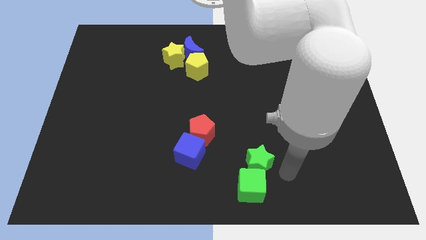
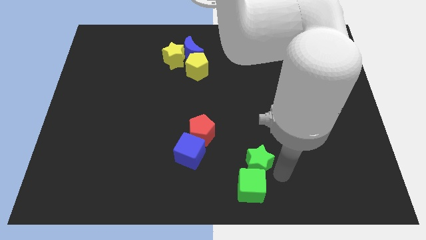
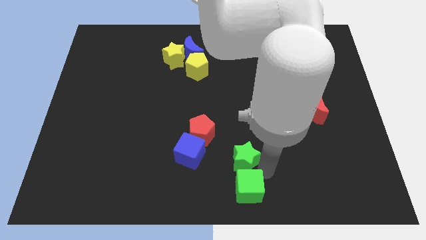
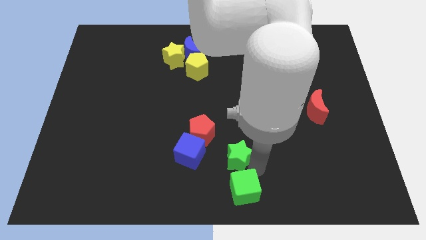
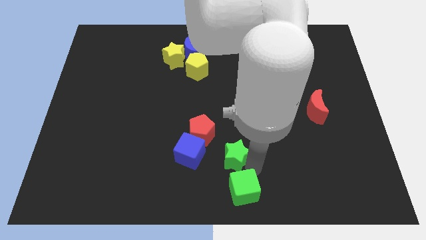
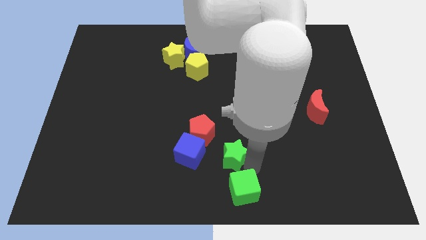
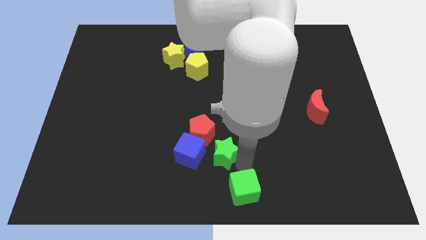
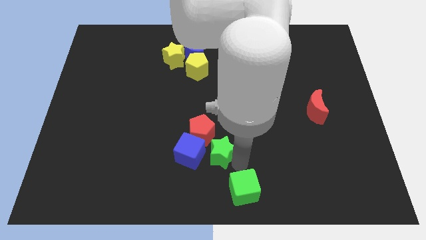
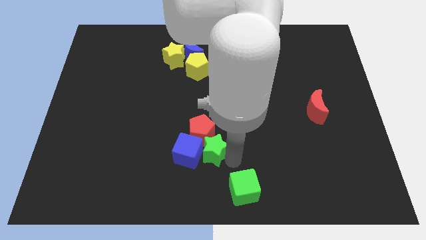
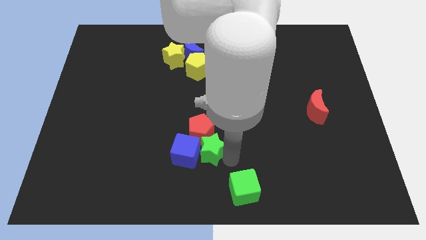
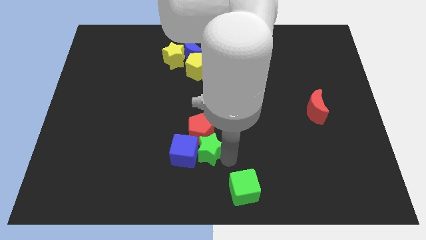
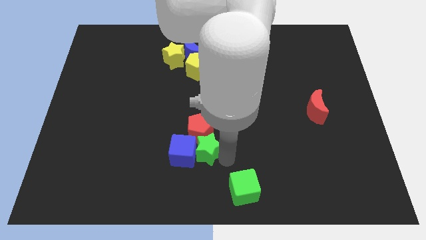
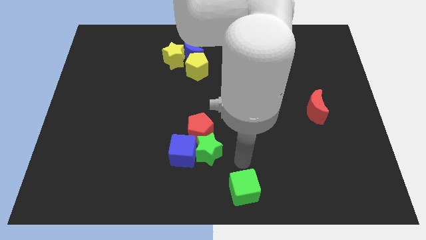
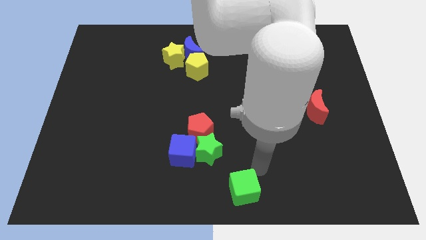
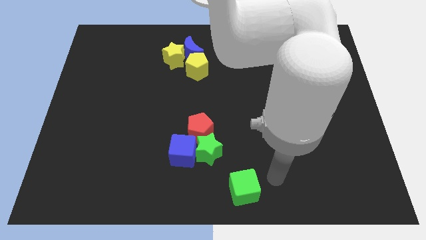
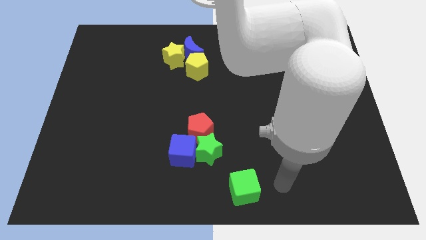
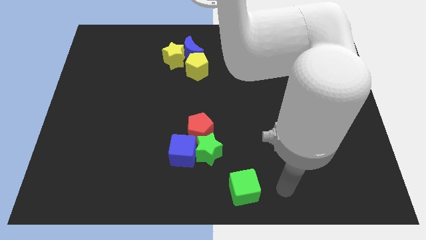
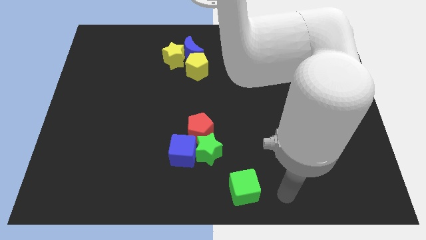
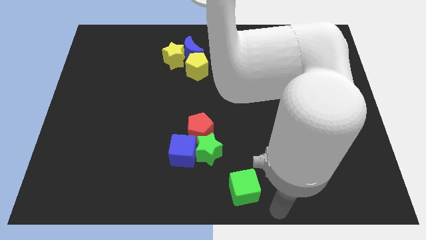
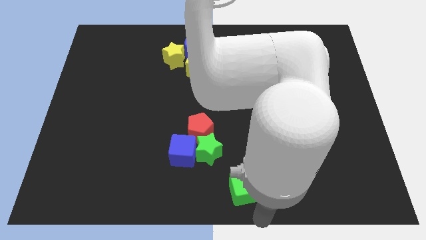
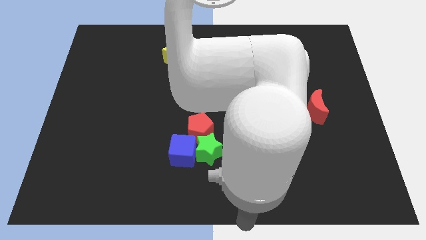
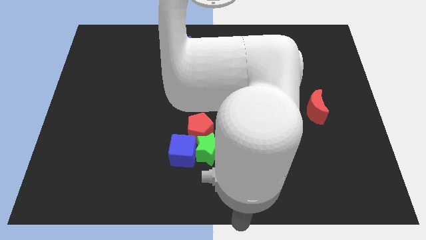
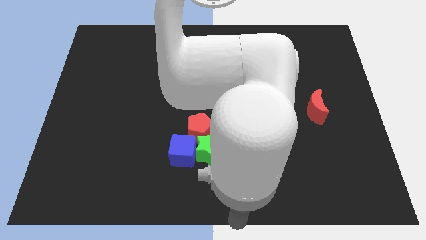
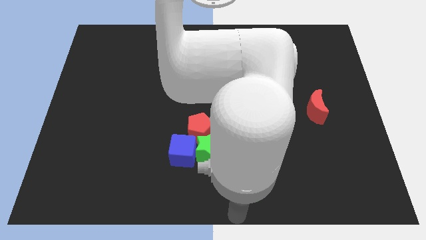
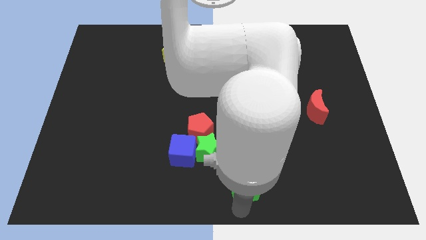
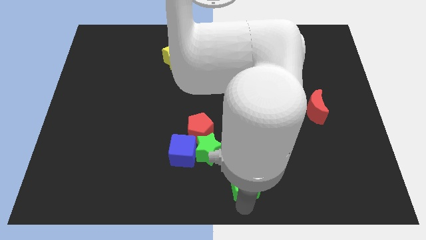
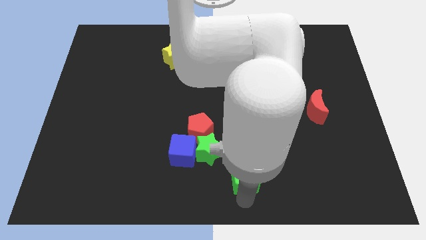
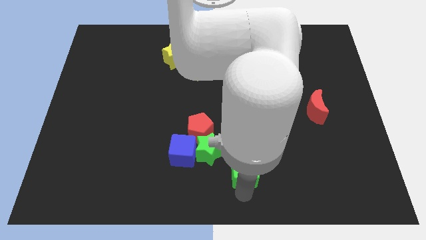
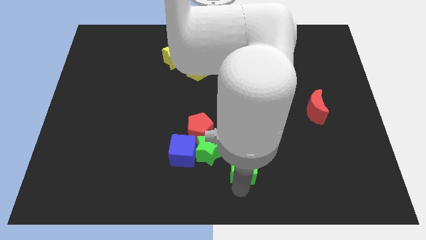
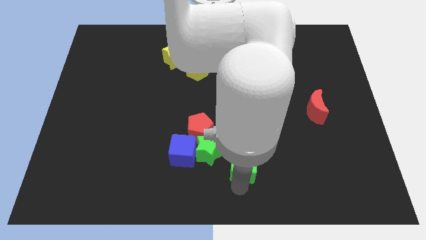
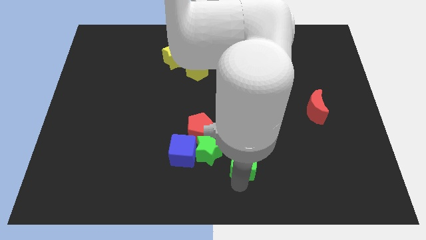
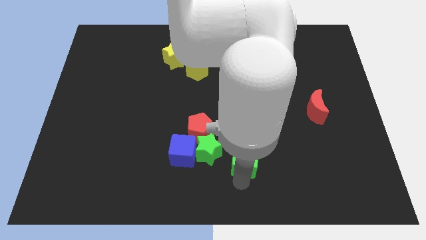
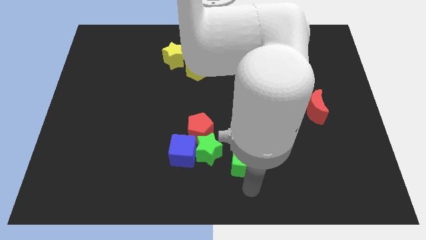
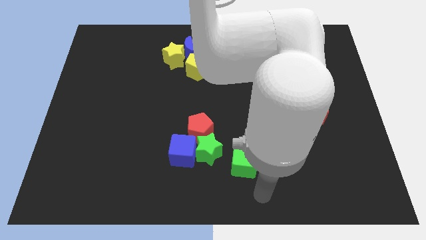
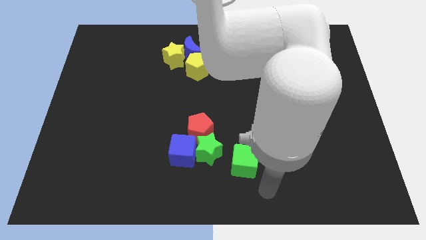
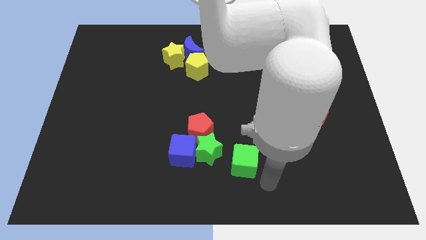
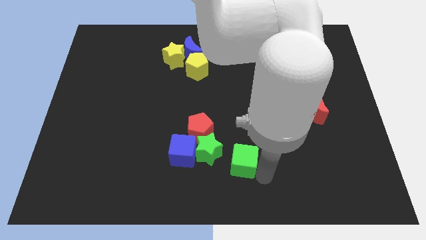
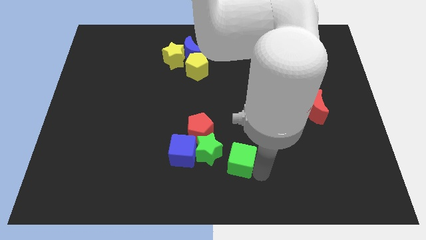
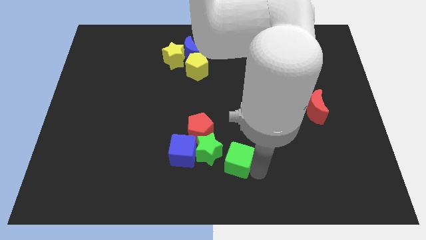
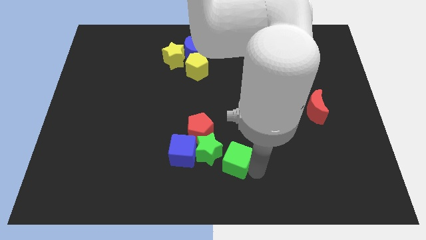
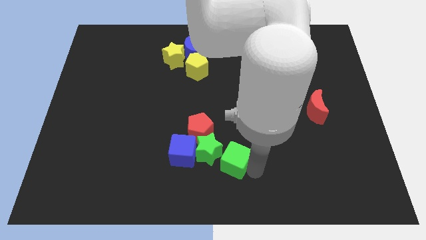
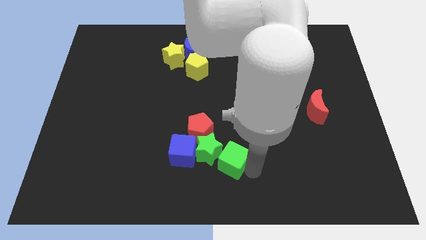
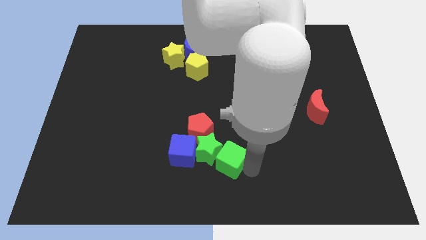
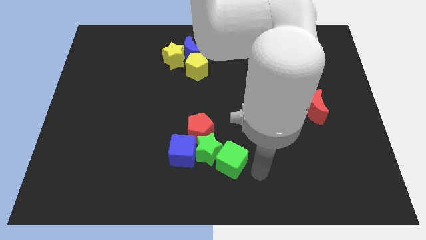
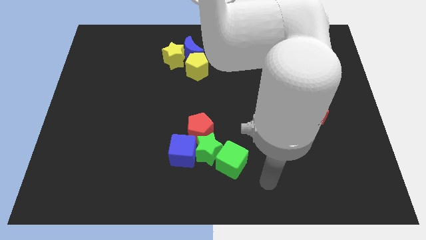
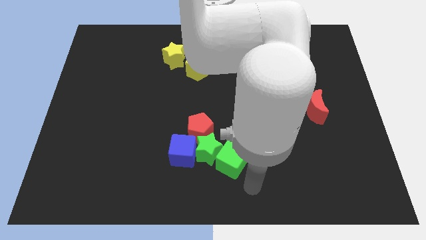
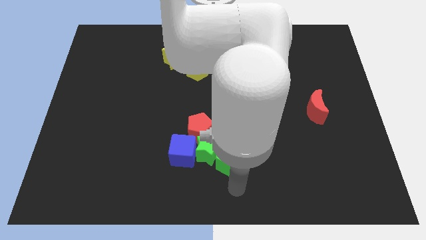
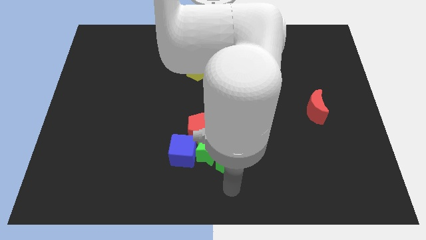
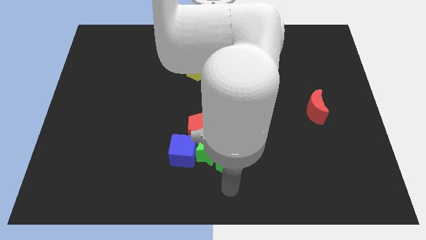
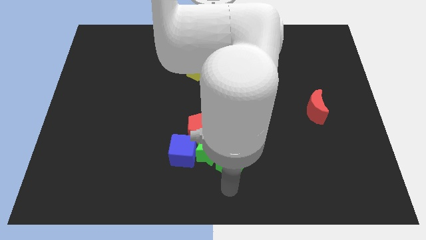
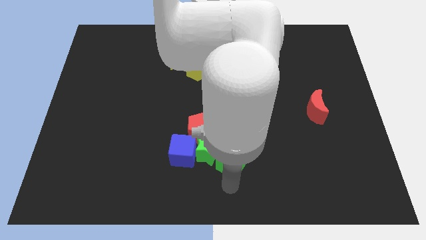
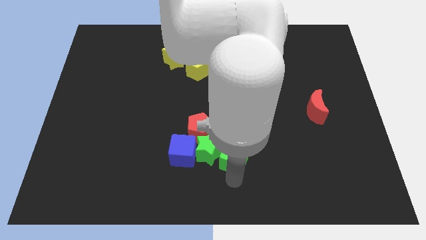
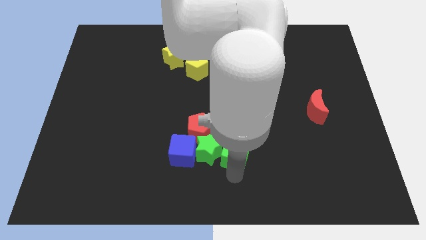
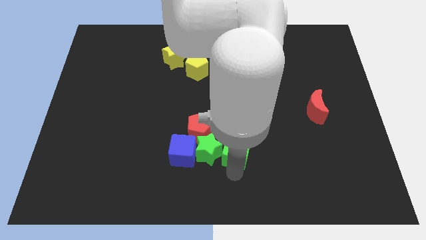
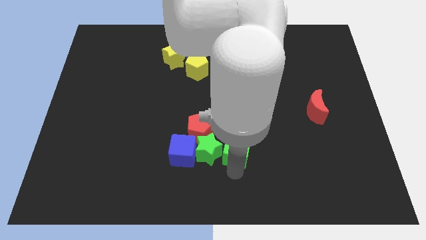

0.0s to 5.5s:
put the group of green blocks to the right of the blue cube

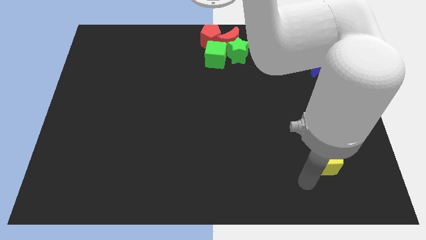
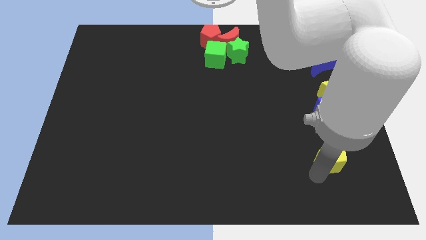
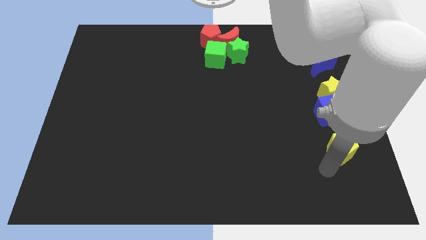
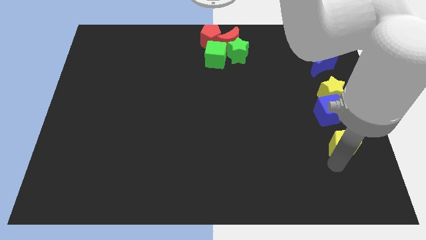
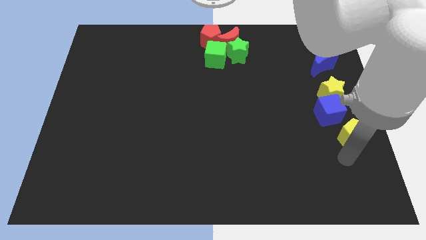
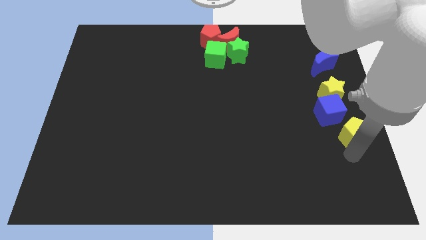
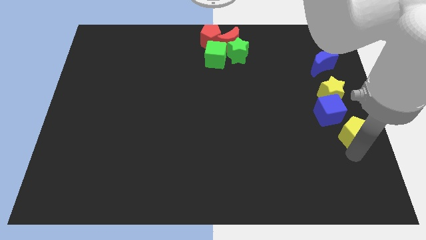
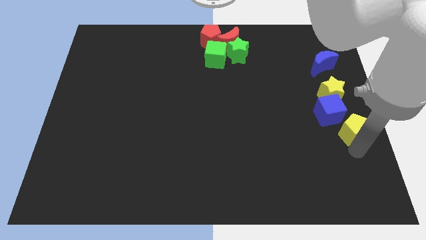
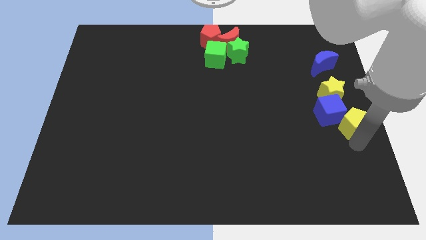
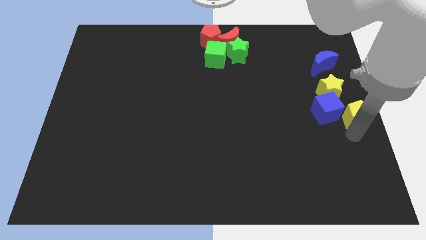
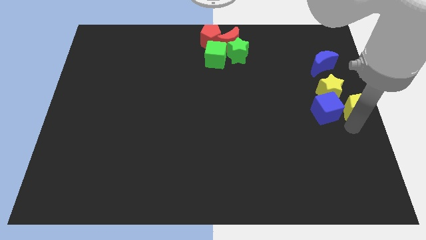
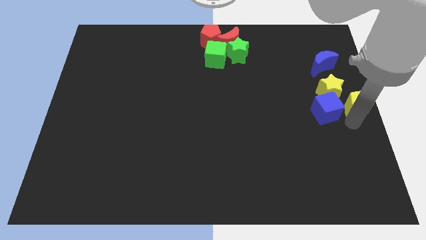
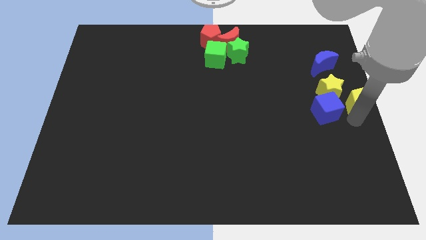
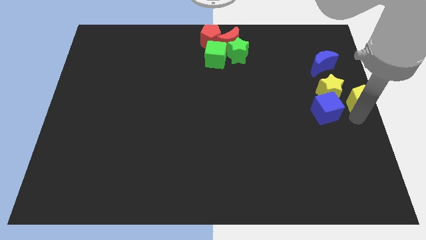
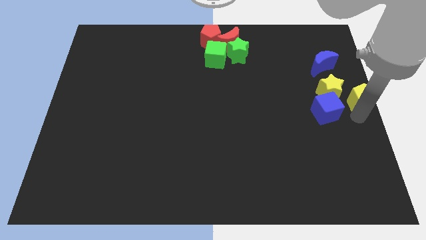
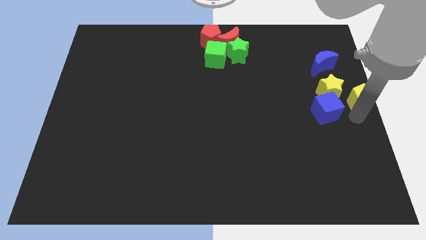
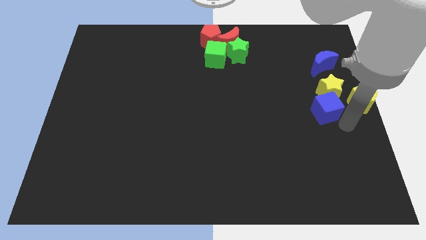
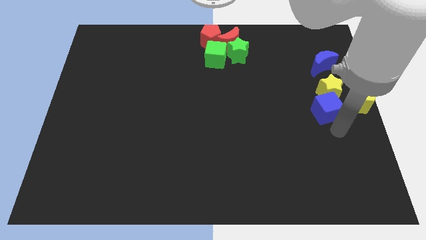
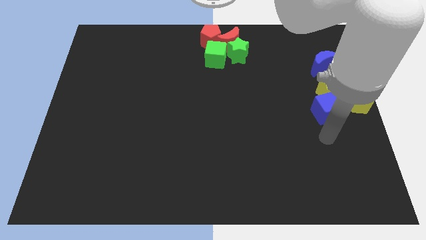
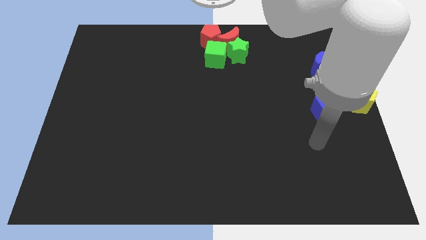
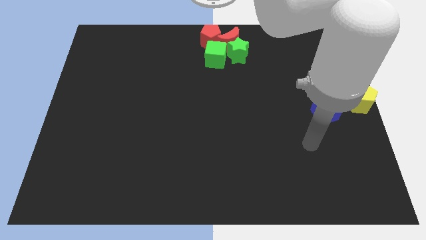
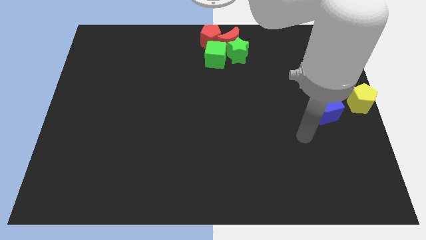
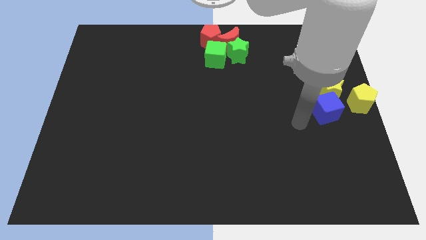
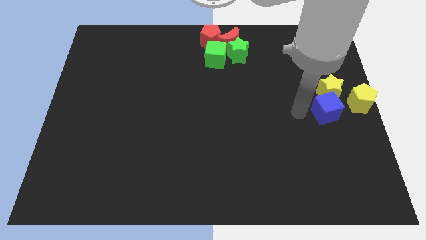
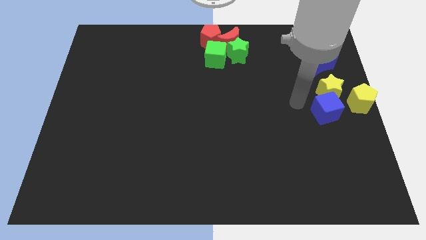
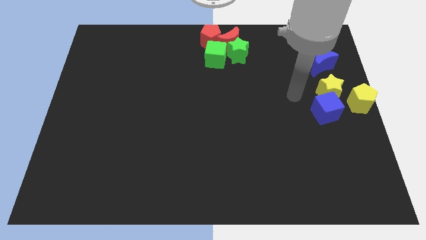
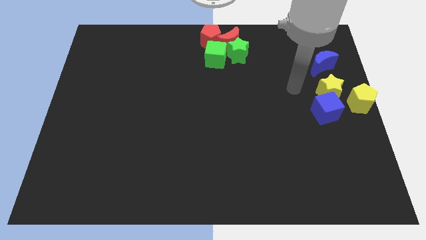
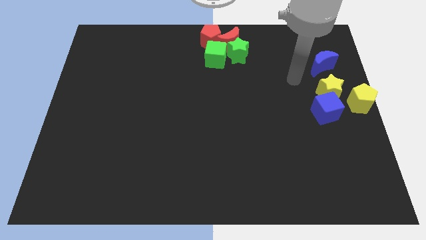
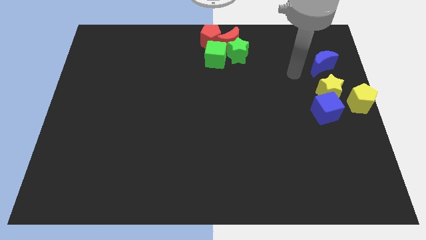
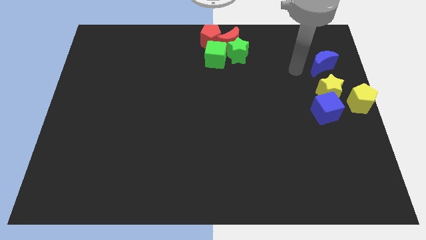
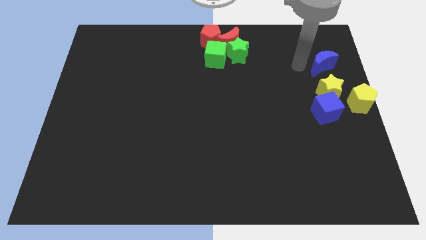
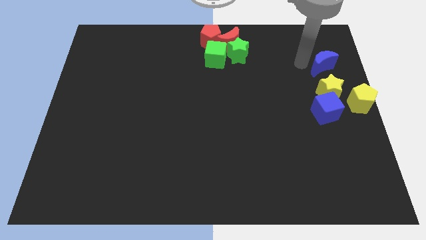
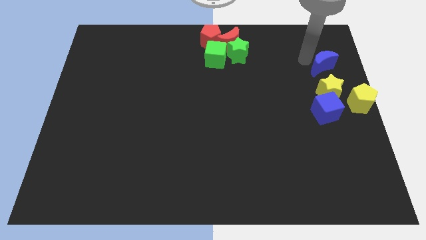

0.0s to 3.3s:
move yellow pentagon to the right centre of the board

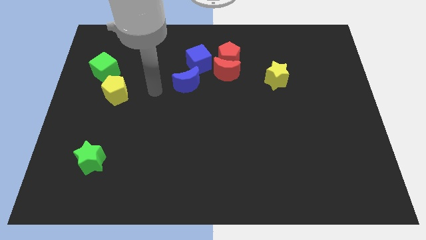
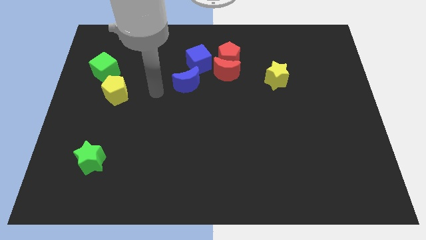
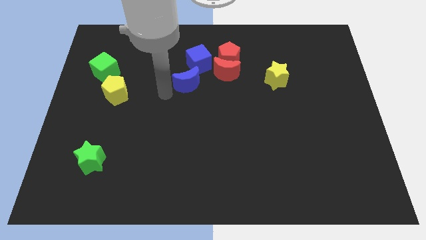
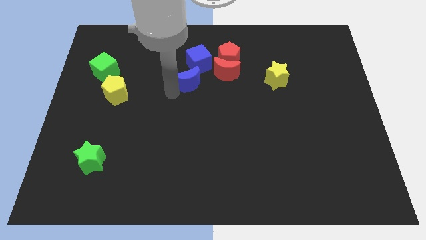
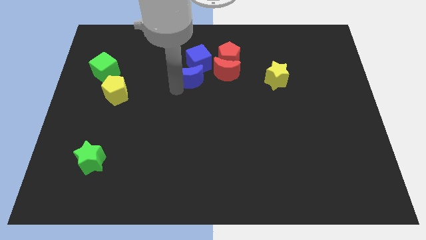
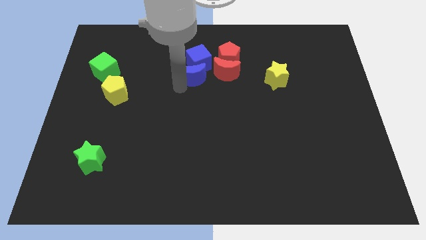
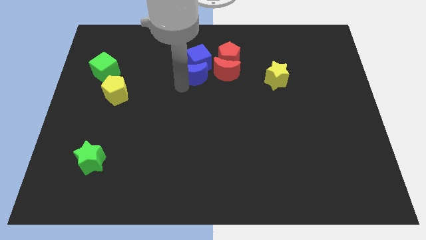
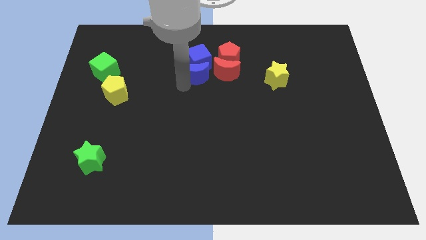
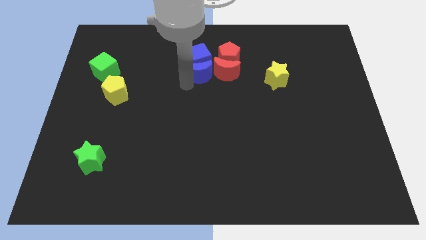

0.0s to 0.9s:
place the blue moon at the bottom of blue cube
